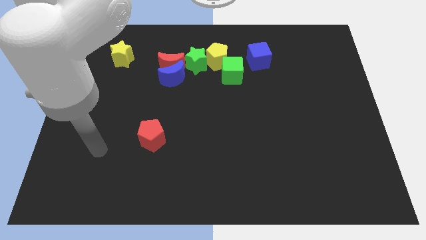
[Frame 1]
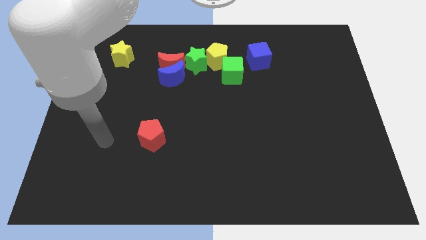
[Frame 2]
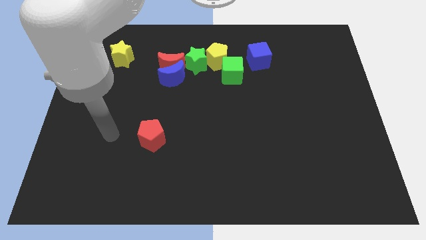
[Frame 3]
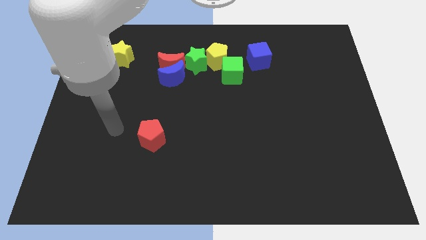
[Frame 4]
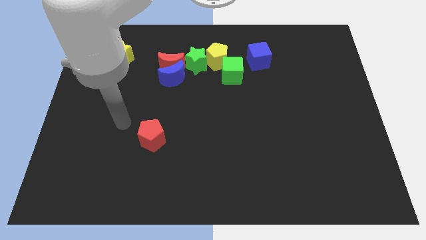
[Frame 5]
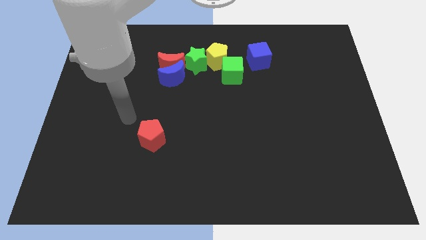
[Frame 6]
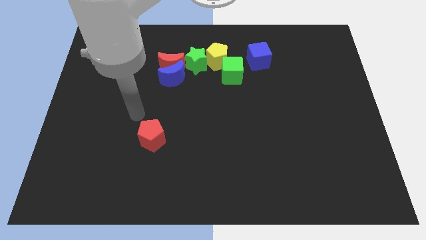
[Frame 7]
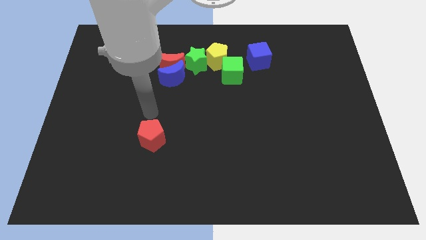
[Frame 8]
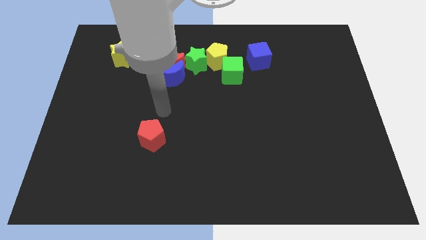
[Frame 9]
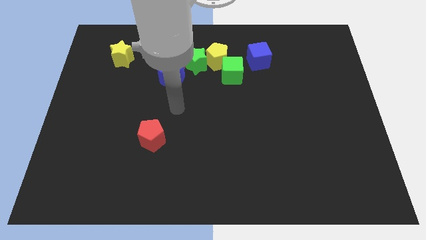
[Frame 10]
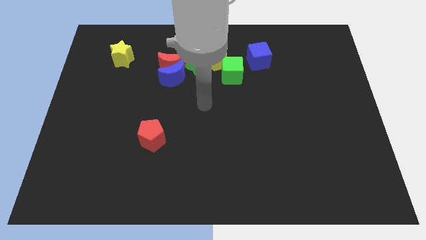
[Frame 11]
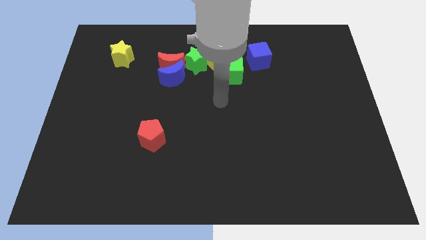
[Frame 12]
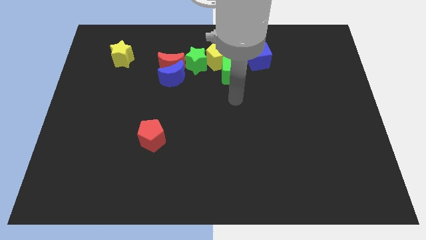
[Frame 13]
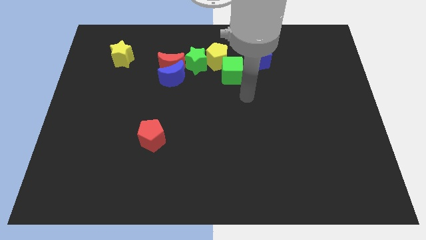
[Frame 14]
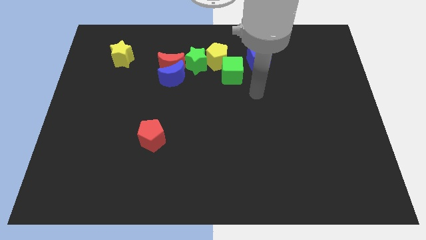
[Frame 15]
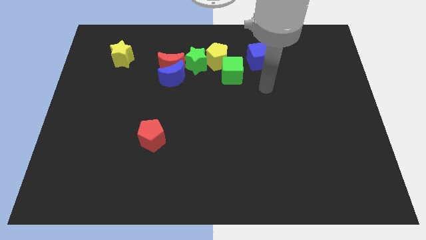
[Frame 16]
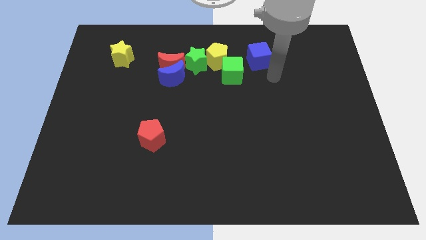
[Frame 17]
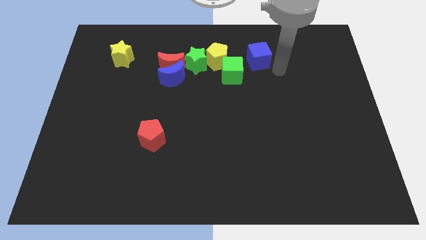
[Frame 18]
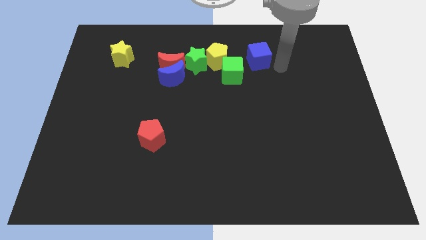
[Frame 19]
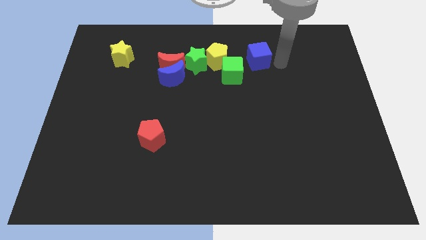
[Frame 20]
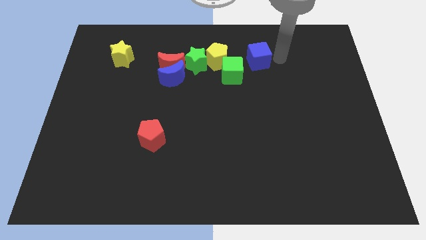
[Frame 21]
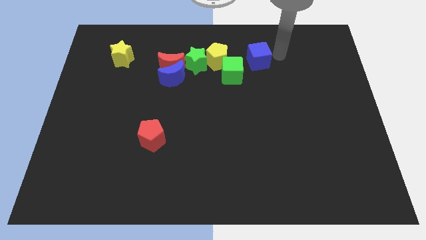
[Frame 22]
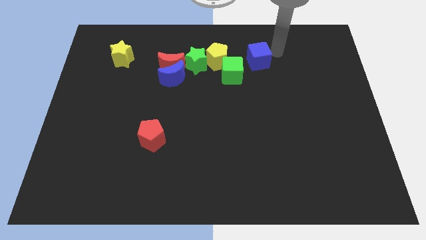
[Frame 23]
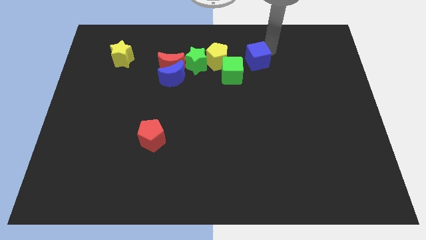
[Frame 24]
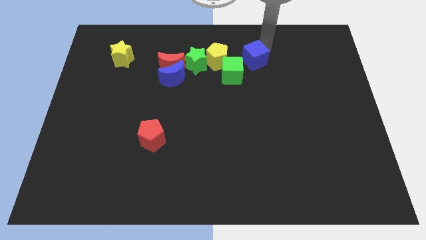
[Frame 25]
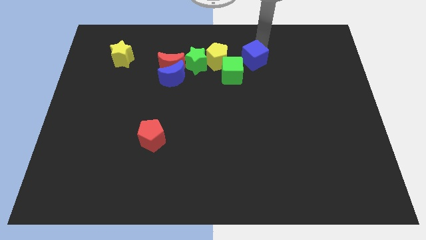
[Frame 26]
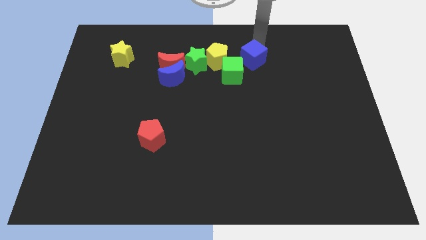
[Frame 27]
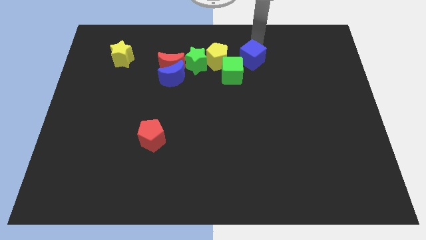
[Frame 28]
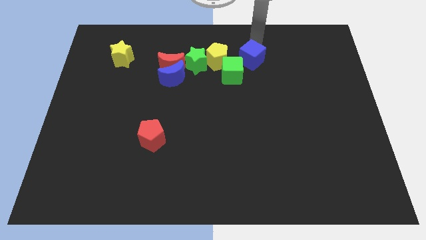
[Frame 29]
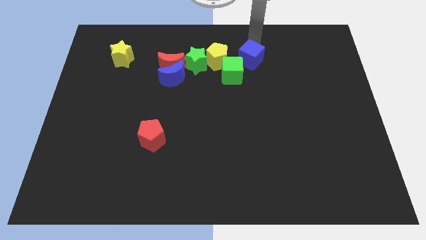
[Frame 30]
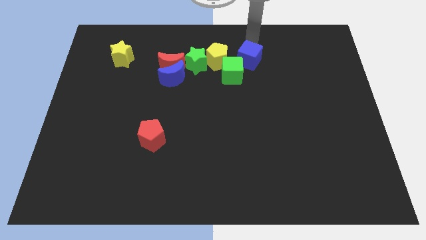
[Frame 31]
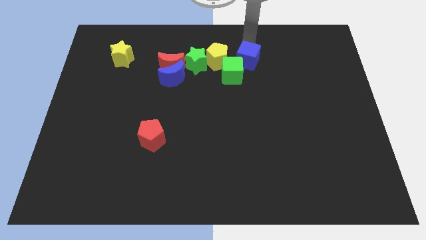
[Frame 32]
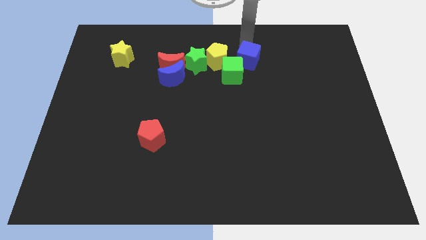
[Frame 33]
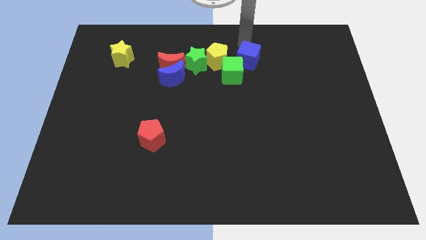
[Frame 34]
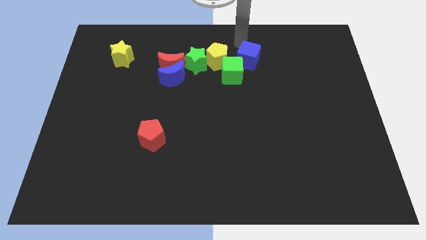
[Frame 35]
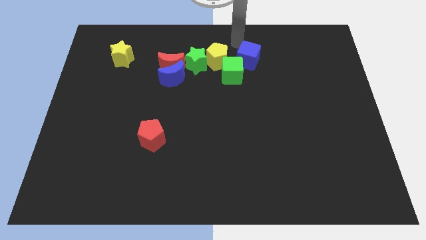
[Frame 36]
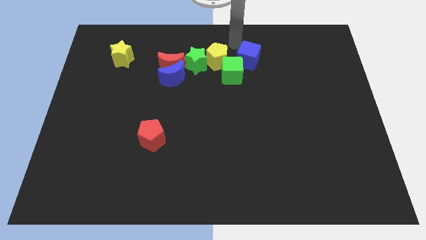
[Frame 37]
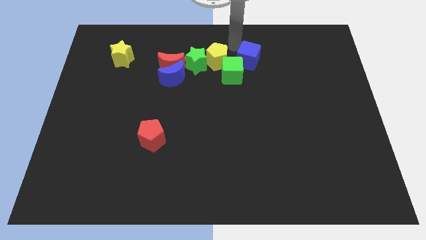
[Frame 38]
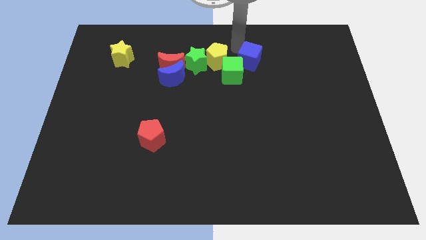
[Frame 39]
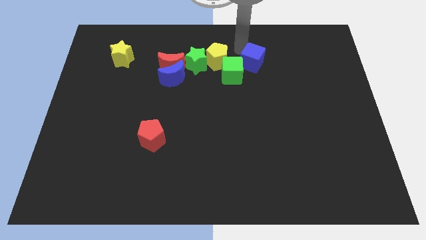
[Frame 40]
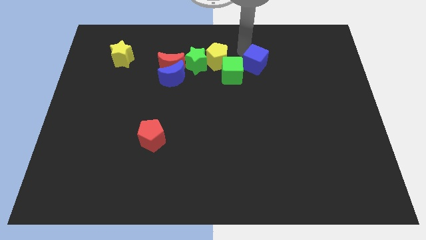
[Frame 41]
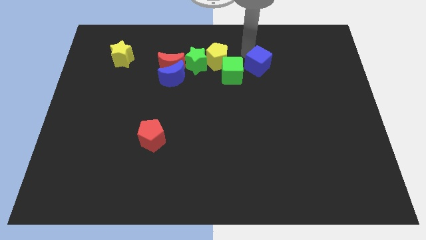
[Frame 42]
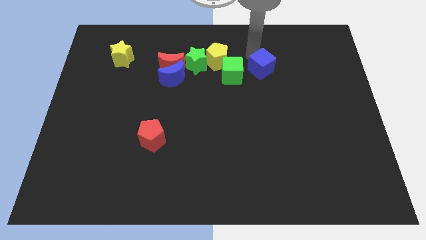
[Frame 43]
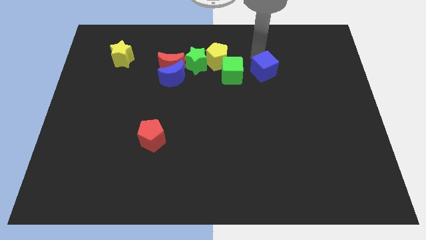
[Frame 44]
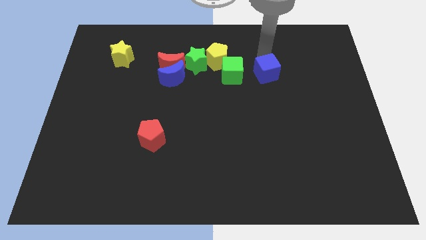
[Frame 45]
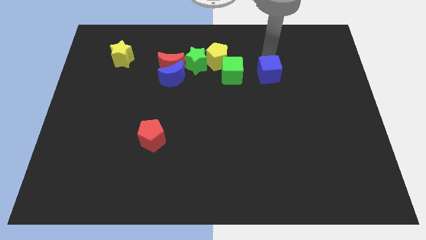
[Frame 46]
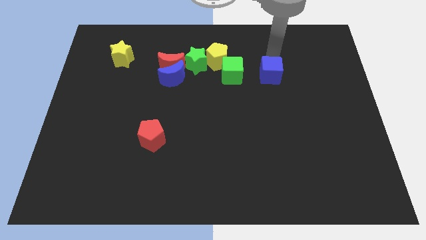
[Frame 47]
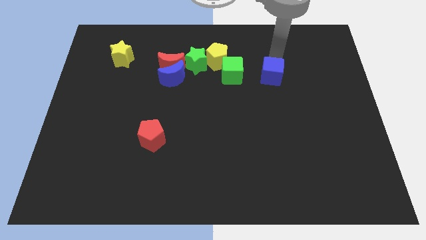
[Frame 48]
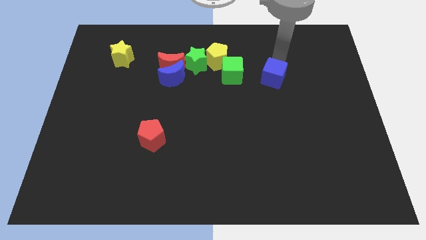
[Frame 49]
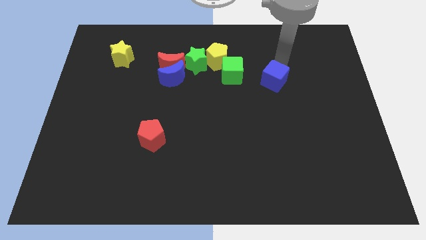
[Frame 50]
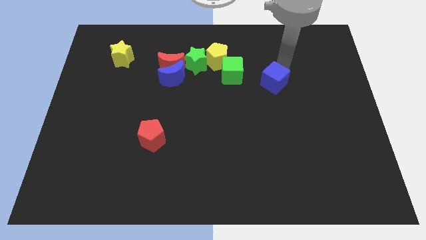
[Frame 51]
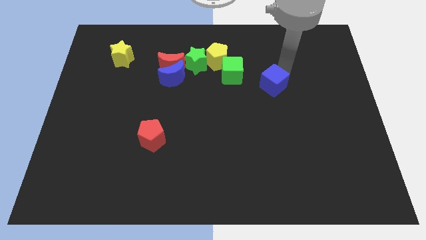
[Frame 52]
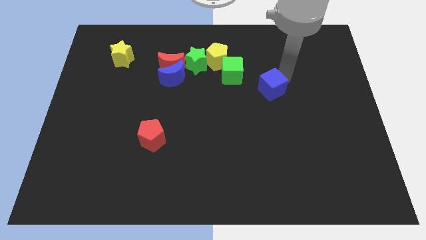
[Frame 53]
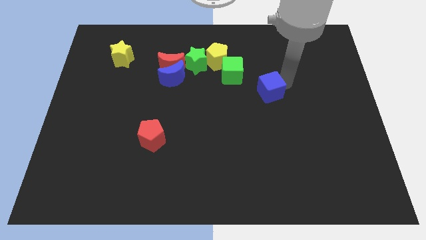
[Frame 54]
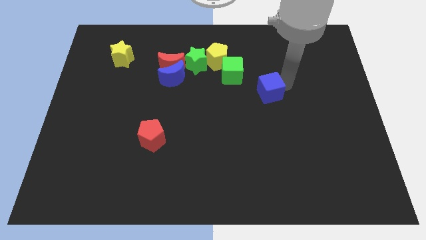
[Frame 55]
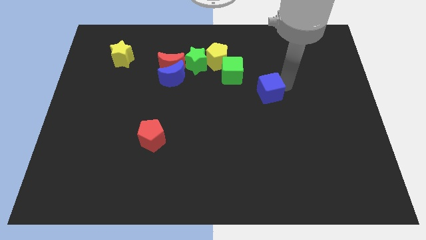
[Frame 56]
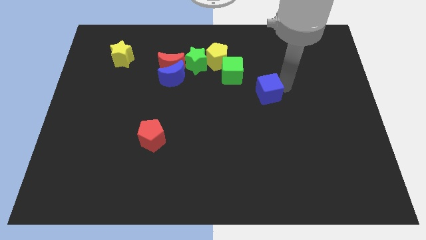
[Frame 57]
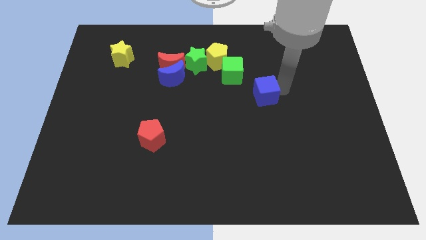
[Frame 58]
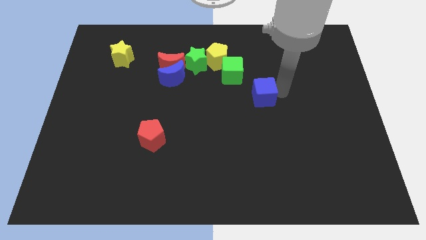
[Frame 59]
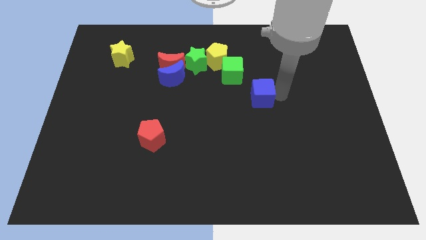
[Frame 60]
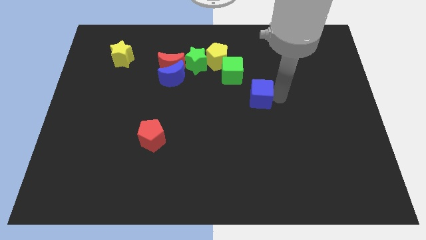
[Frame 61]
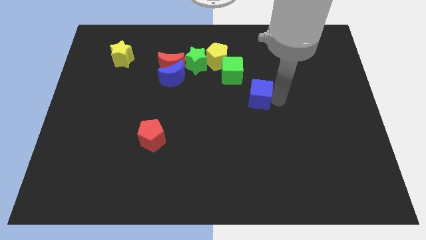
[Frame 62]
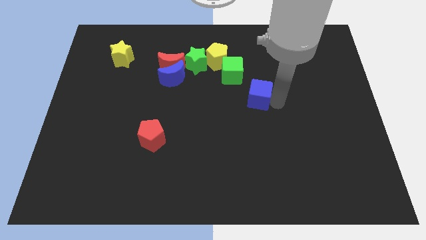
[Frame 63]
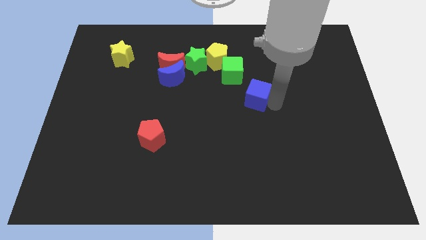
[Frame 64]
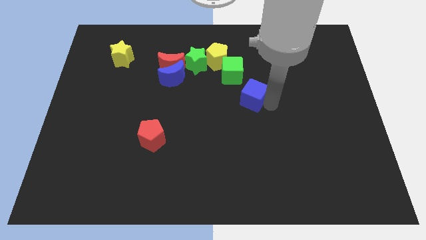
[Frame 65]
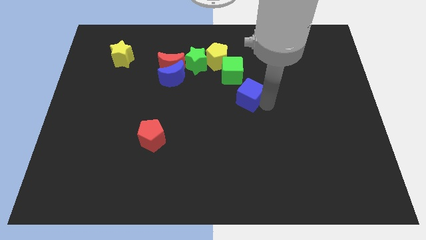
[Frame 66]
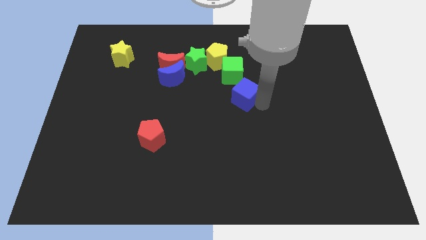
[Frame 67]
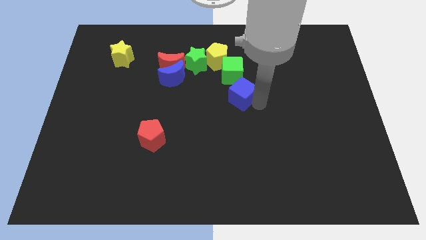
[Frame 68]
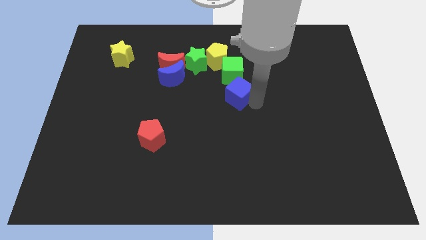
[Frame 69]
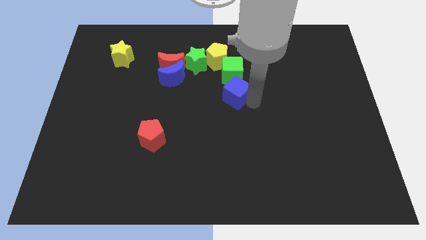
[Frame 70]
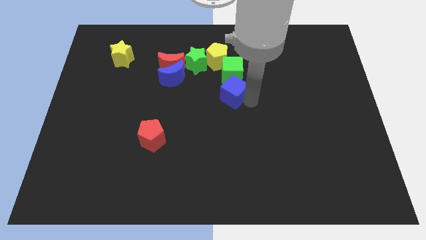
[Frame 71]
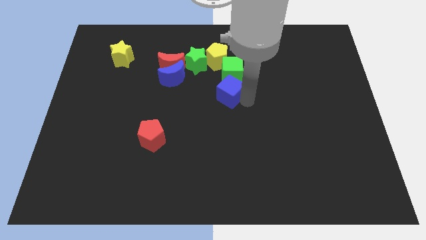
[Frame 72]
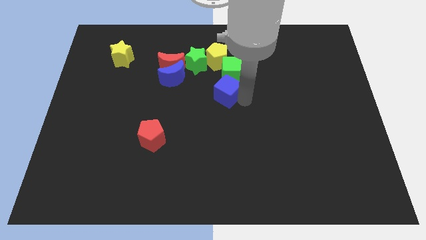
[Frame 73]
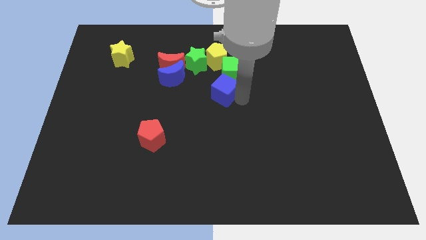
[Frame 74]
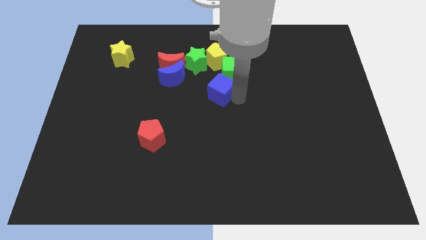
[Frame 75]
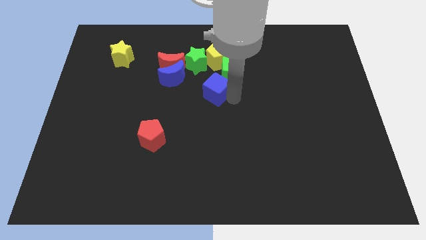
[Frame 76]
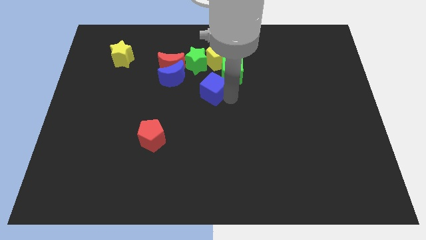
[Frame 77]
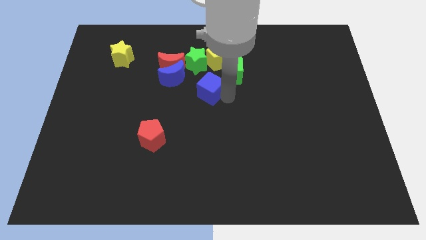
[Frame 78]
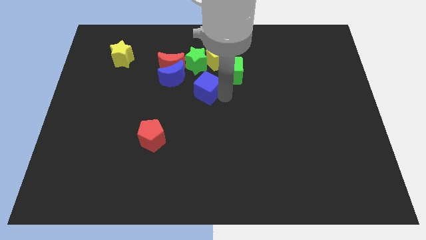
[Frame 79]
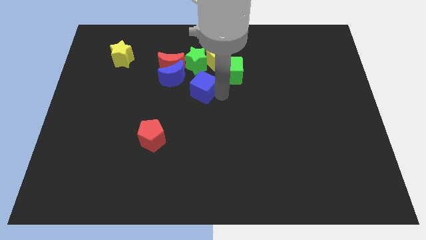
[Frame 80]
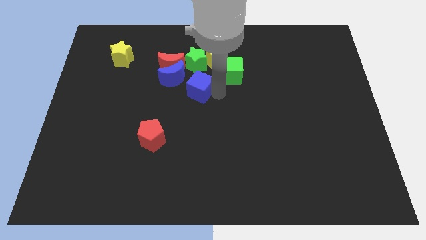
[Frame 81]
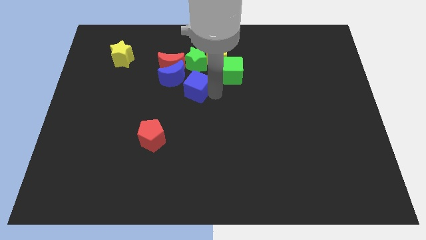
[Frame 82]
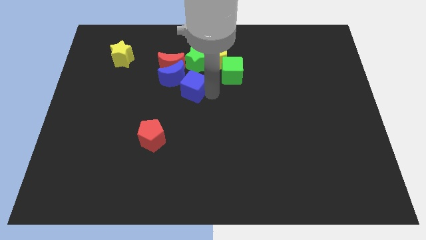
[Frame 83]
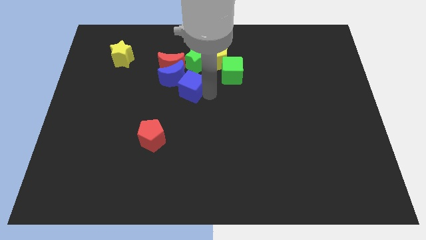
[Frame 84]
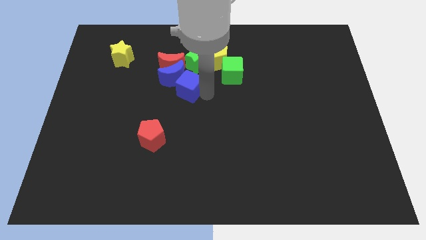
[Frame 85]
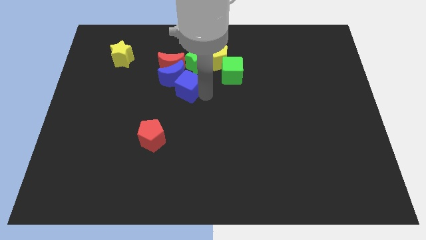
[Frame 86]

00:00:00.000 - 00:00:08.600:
slide the blue cube to the blue moon
